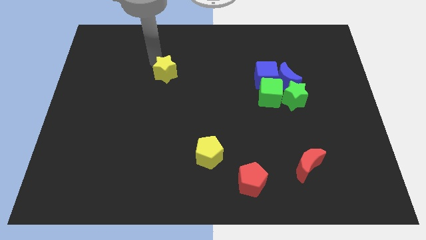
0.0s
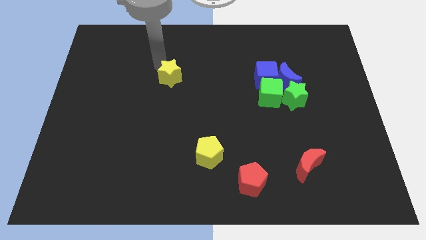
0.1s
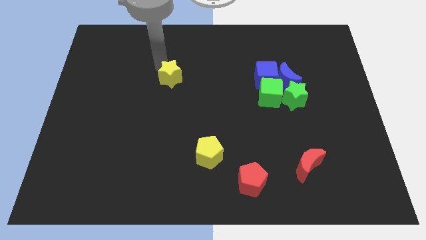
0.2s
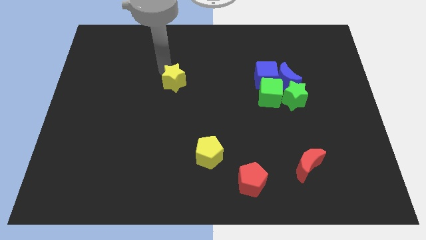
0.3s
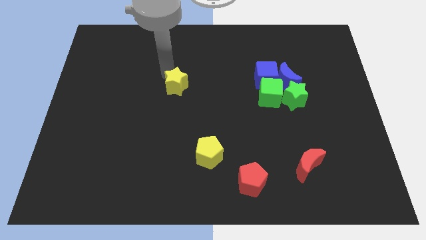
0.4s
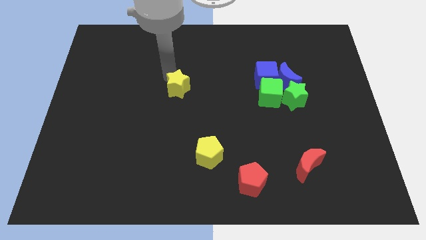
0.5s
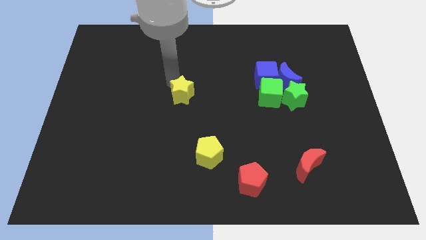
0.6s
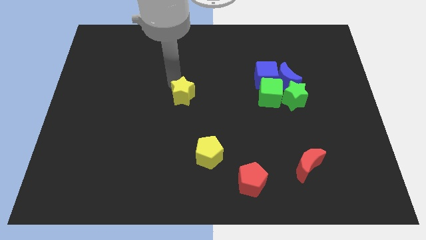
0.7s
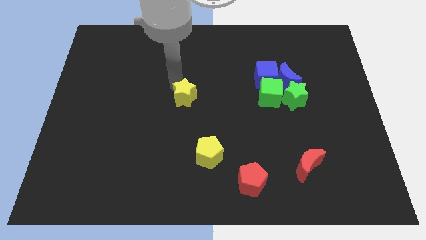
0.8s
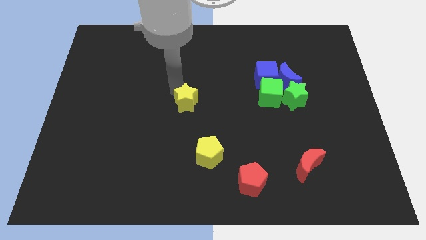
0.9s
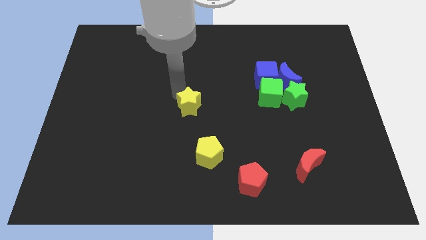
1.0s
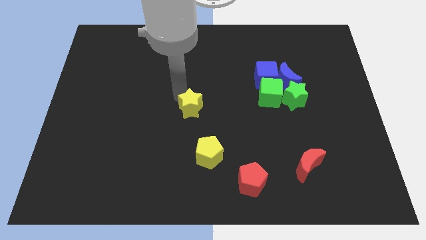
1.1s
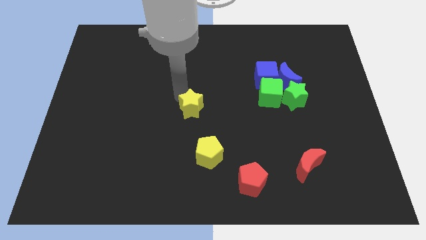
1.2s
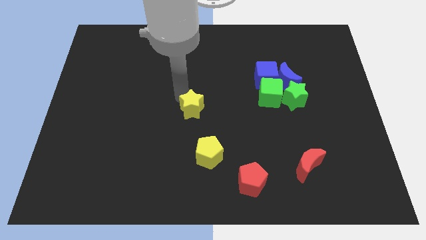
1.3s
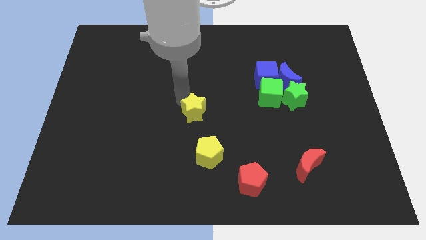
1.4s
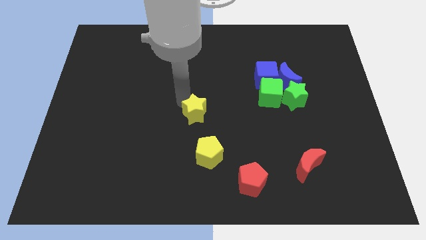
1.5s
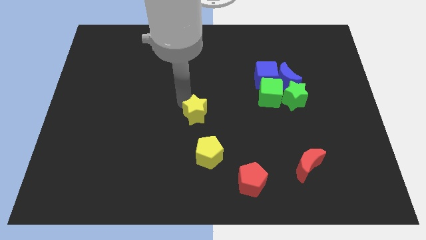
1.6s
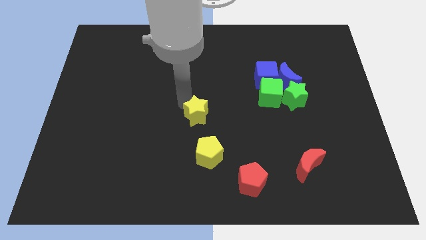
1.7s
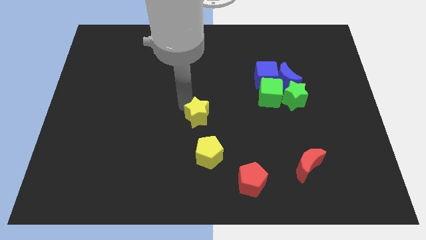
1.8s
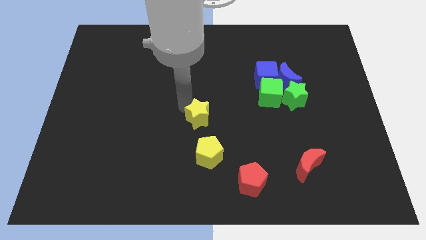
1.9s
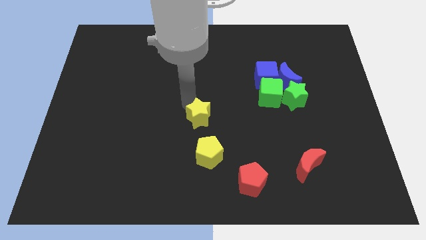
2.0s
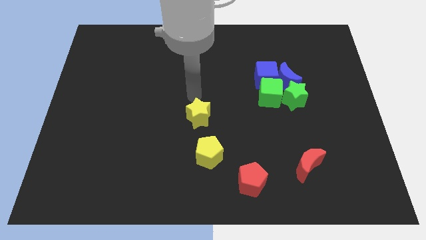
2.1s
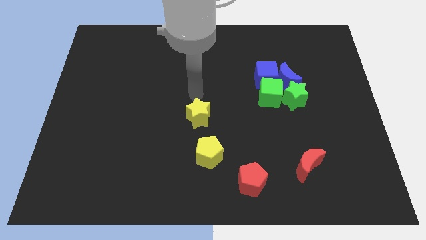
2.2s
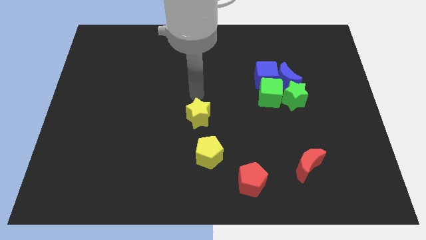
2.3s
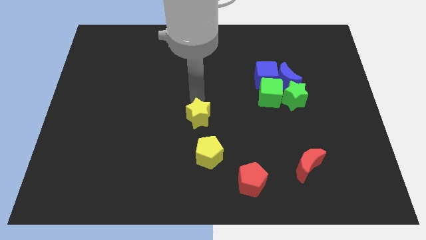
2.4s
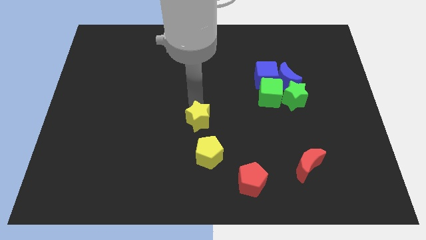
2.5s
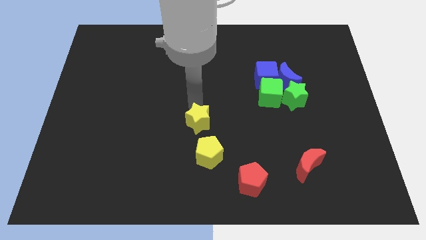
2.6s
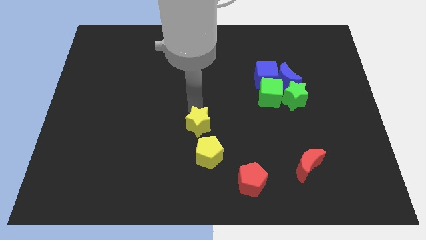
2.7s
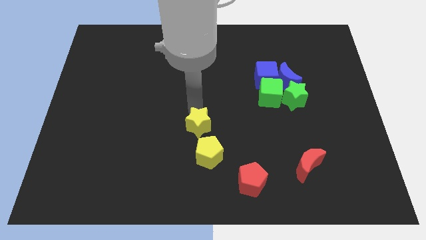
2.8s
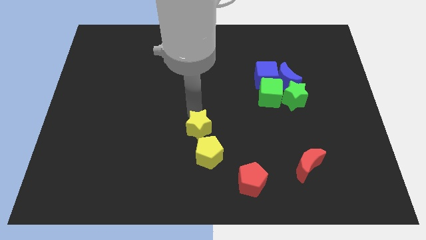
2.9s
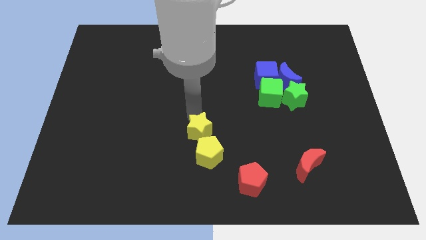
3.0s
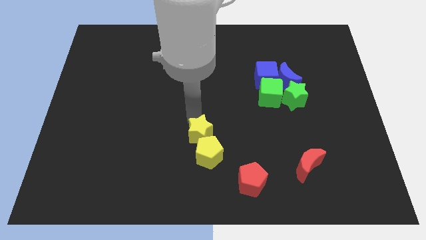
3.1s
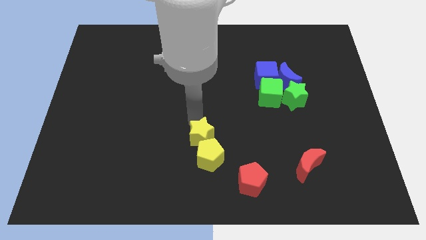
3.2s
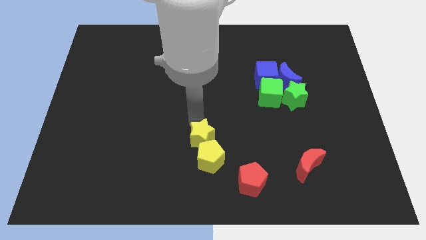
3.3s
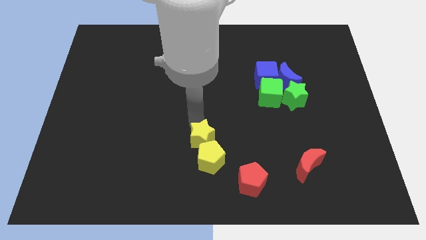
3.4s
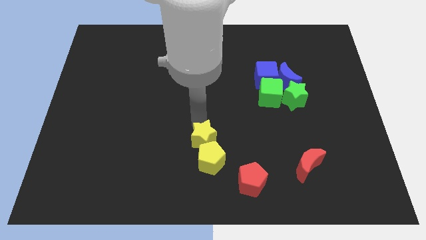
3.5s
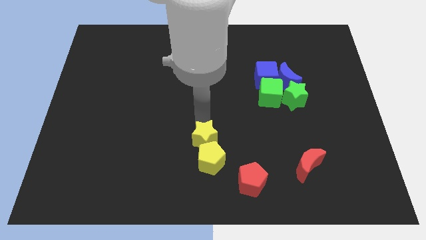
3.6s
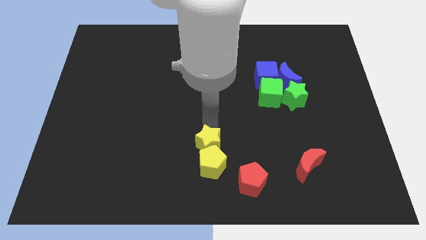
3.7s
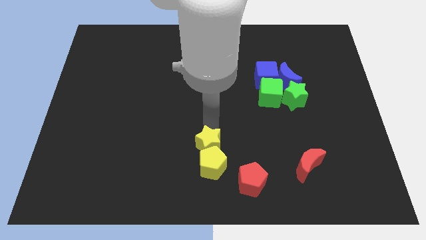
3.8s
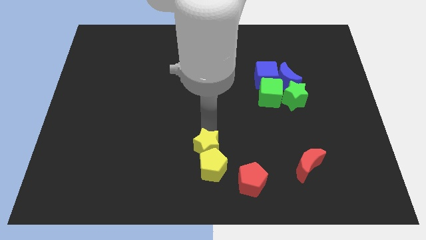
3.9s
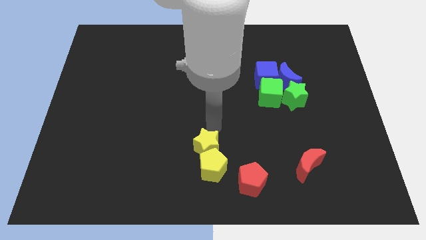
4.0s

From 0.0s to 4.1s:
push yellow star into yellow pentagon

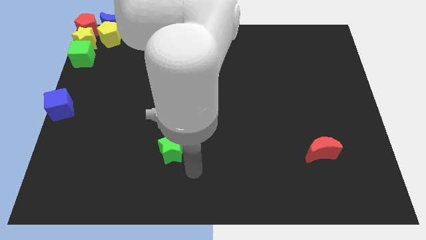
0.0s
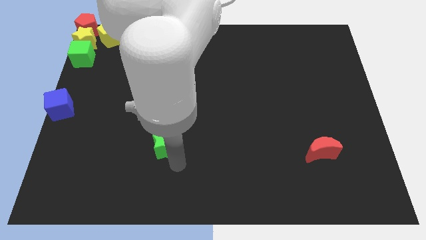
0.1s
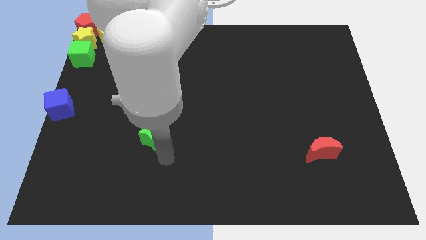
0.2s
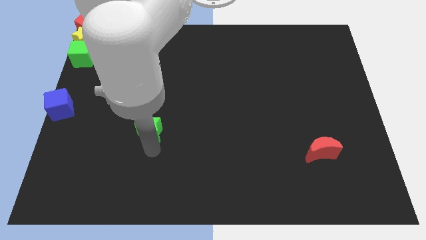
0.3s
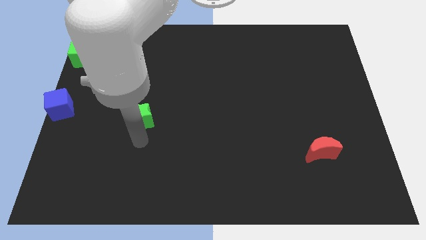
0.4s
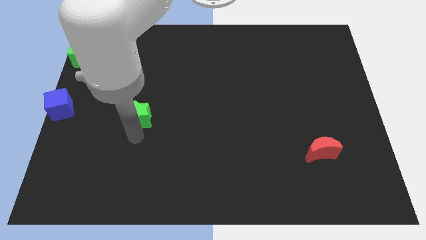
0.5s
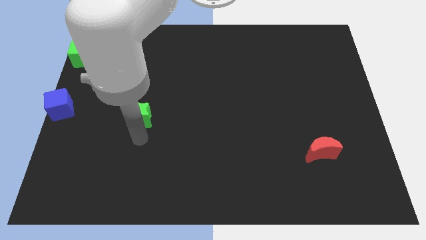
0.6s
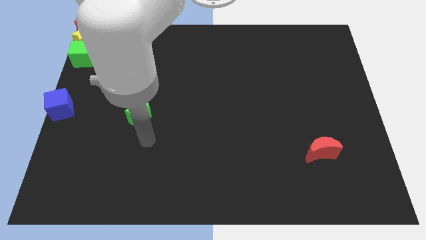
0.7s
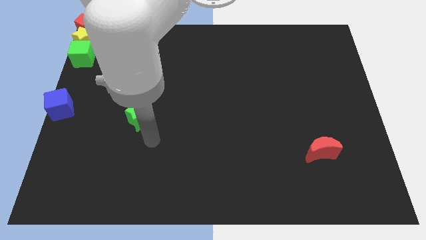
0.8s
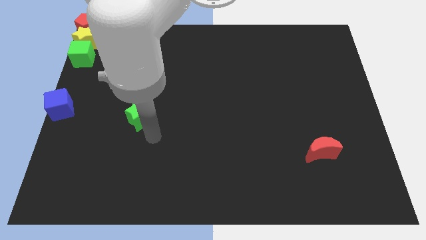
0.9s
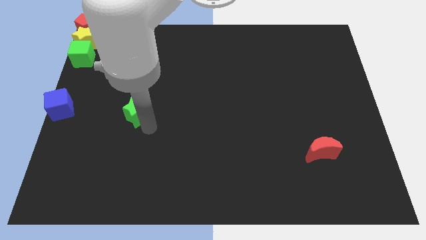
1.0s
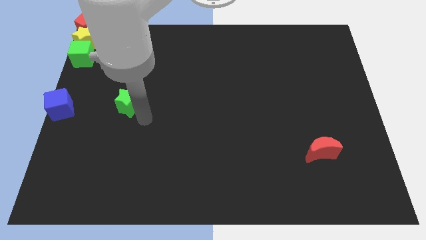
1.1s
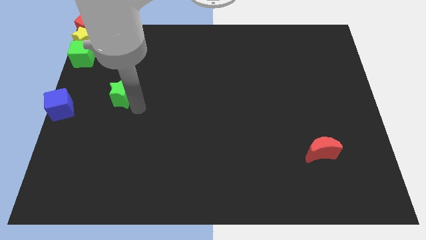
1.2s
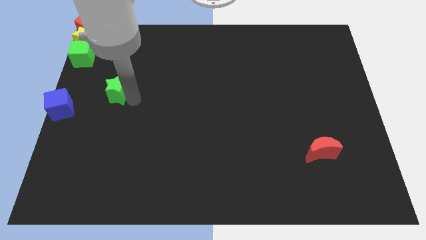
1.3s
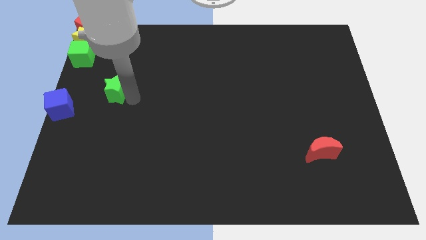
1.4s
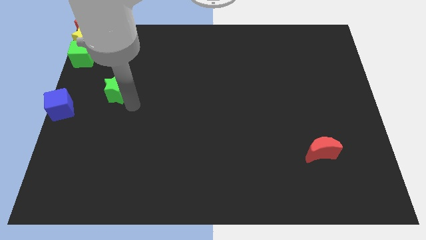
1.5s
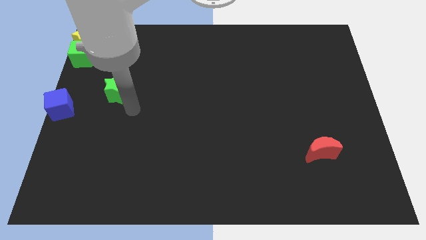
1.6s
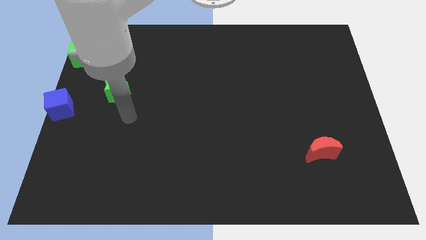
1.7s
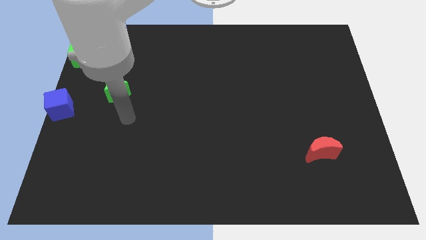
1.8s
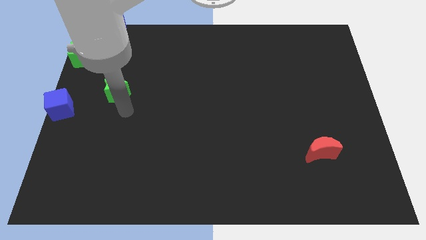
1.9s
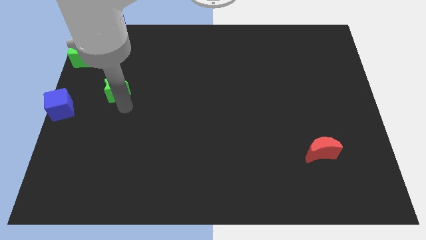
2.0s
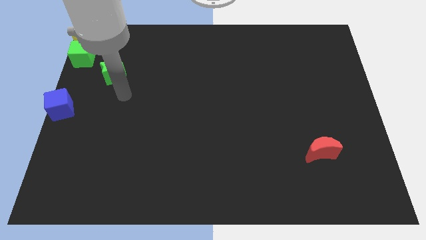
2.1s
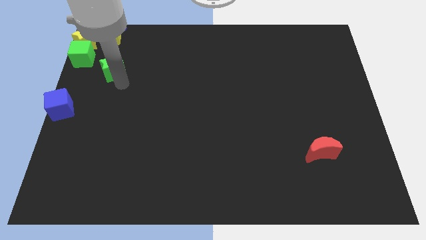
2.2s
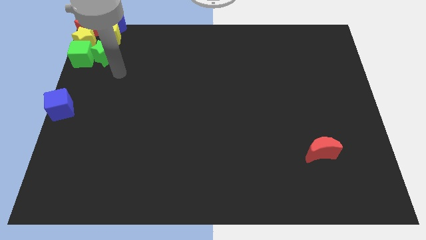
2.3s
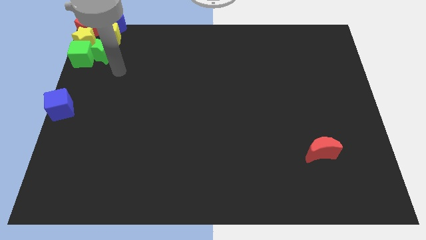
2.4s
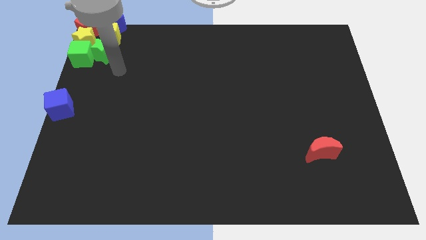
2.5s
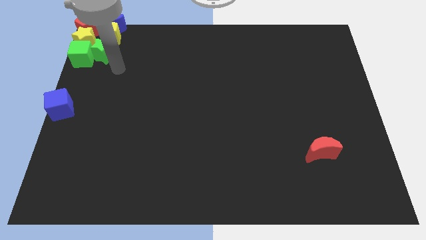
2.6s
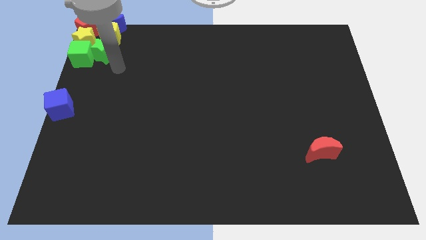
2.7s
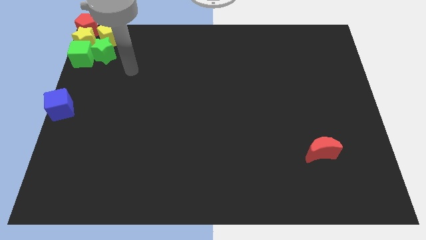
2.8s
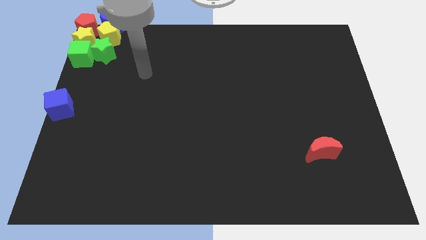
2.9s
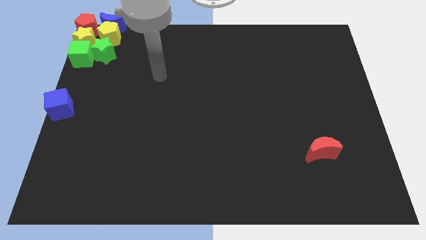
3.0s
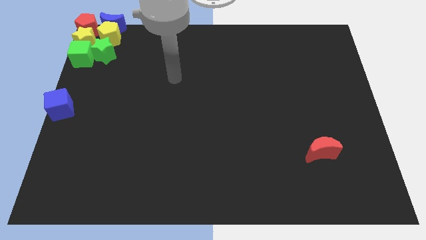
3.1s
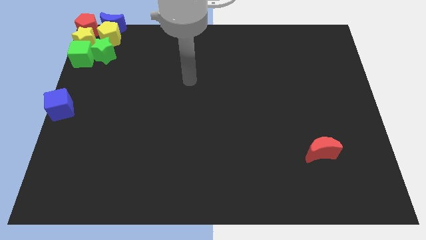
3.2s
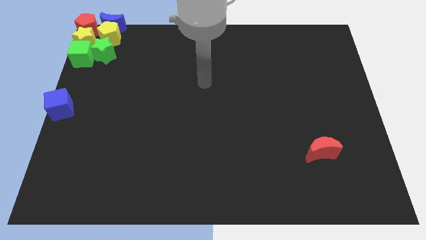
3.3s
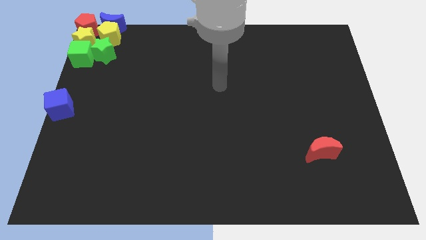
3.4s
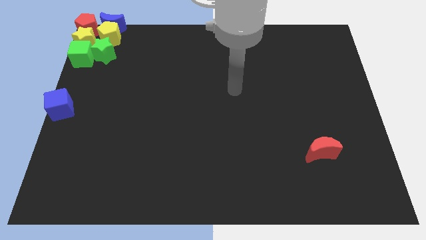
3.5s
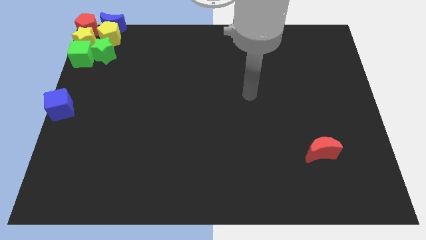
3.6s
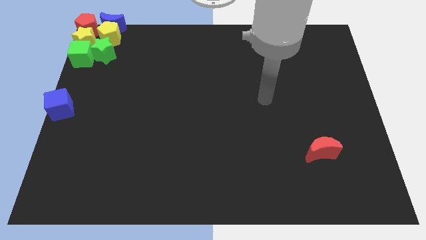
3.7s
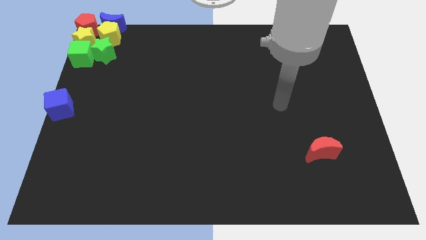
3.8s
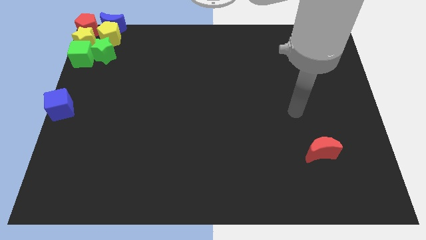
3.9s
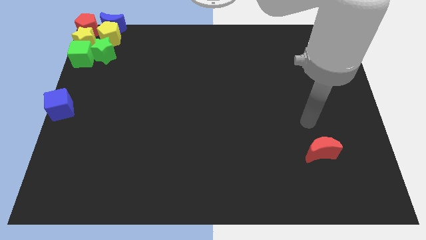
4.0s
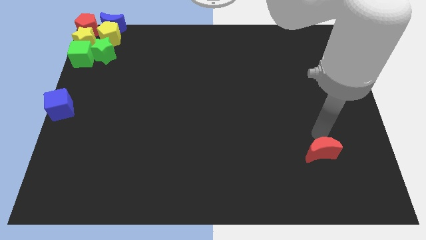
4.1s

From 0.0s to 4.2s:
place the green star below the yellow pentagon to form a vertical line

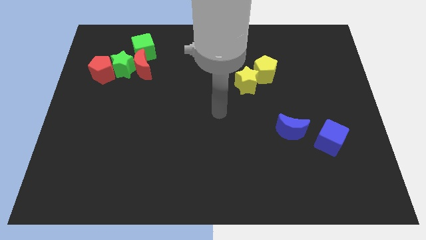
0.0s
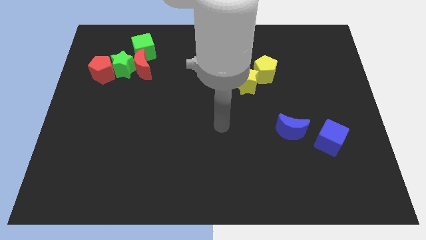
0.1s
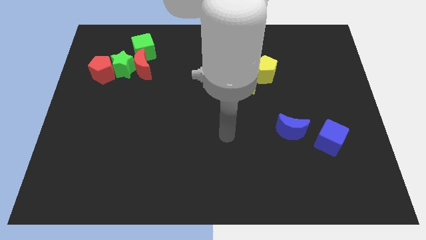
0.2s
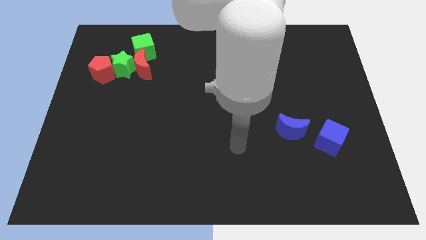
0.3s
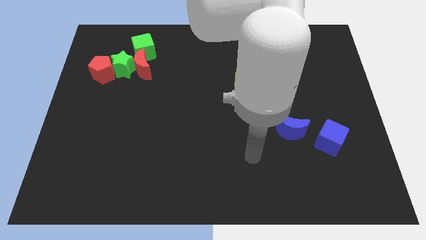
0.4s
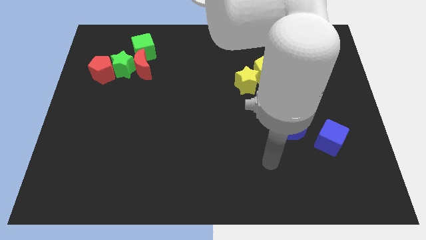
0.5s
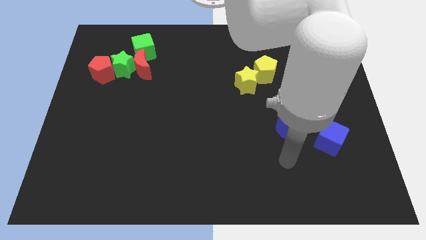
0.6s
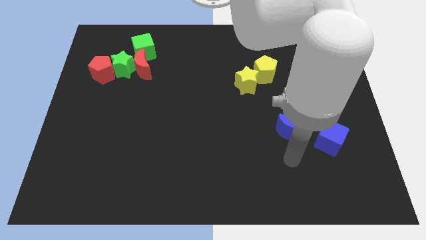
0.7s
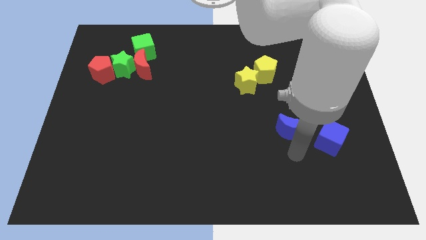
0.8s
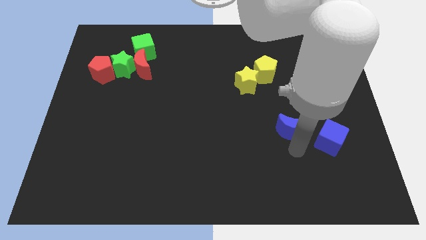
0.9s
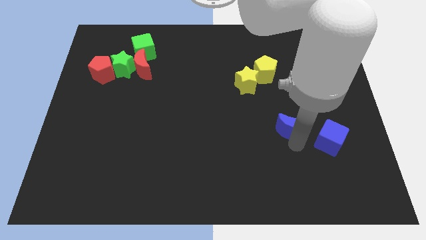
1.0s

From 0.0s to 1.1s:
point your arm at the bottom side of the blue crescent
